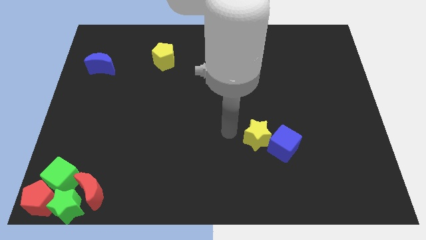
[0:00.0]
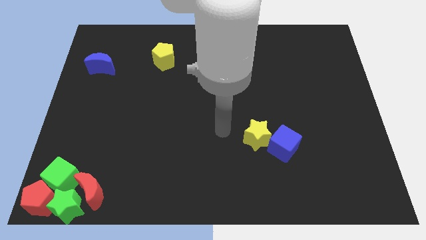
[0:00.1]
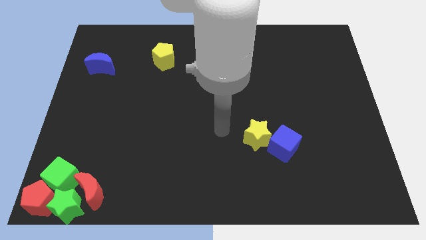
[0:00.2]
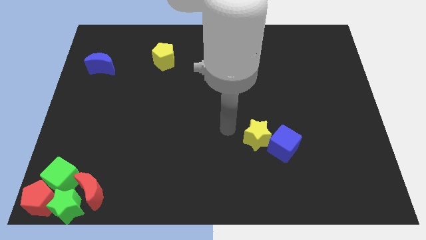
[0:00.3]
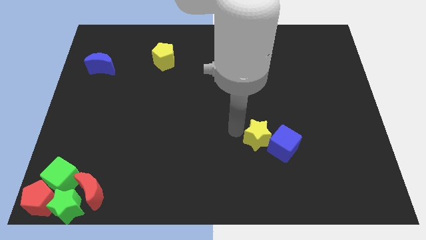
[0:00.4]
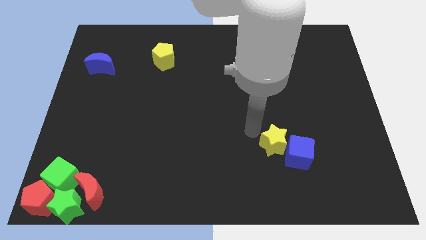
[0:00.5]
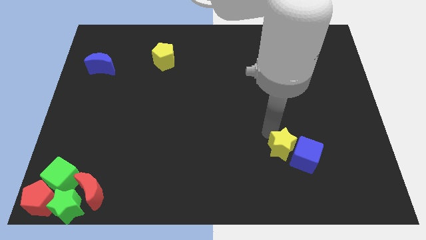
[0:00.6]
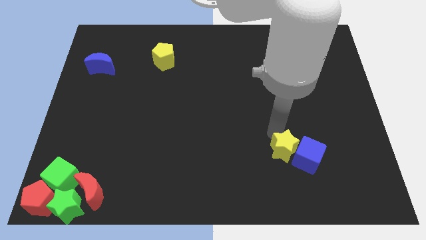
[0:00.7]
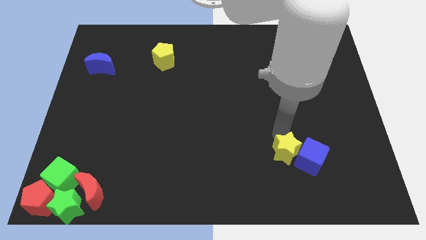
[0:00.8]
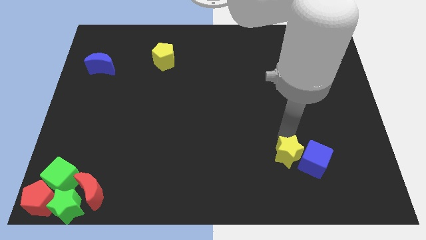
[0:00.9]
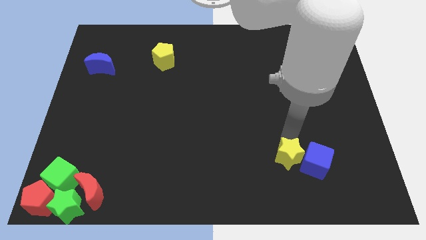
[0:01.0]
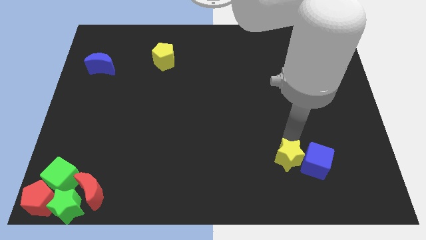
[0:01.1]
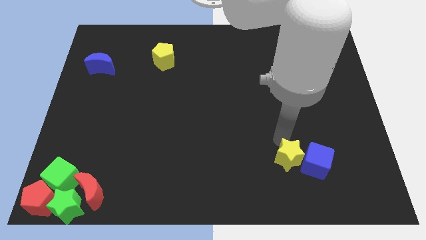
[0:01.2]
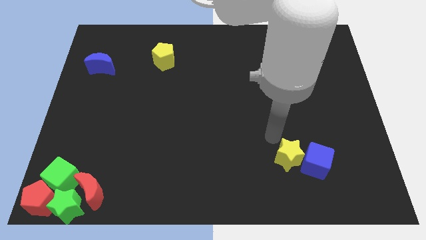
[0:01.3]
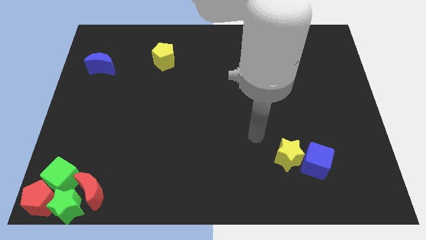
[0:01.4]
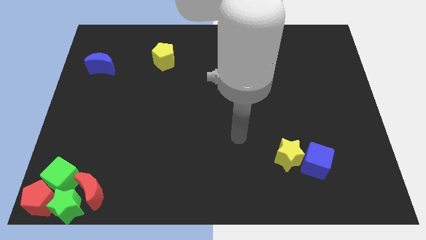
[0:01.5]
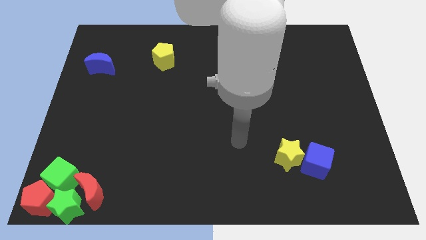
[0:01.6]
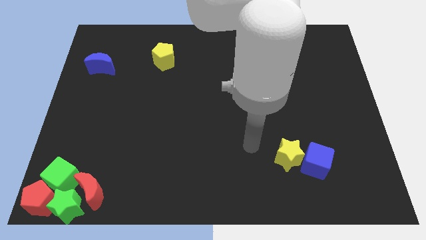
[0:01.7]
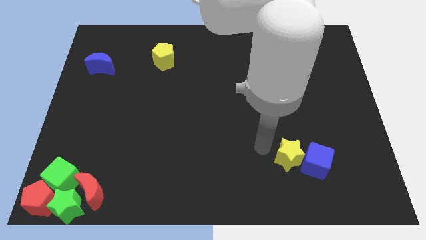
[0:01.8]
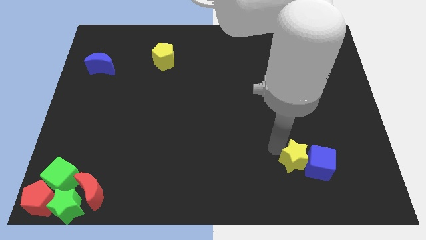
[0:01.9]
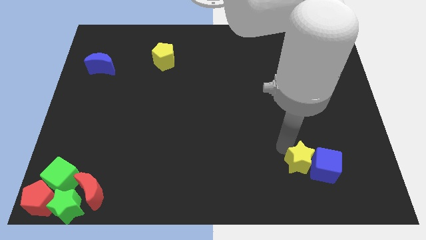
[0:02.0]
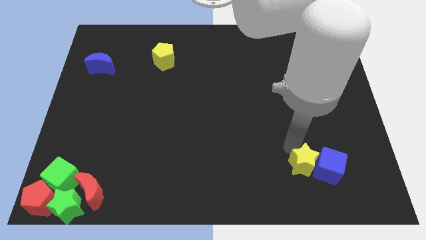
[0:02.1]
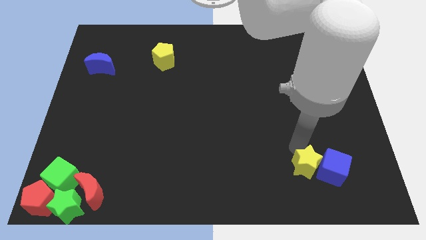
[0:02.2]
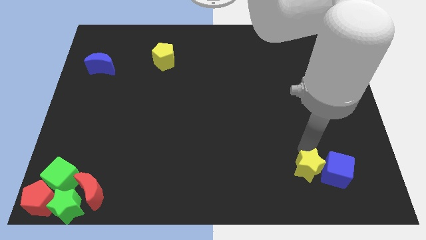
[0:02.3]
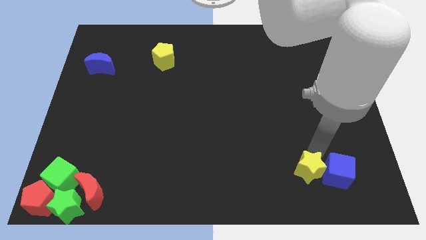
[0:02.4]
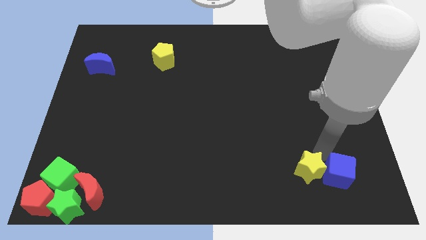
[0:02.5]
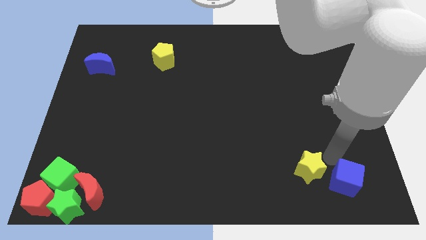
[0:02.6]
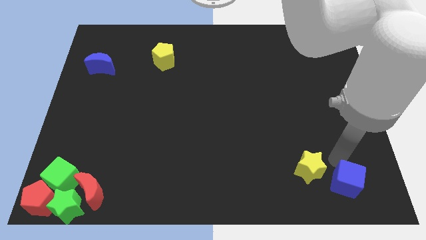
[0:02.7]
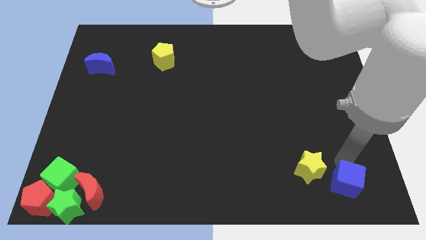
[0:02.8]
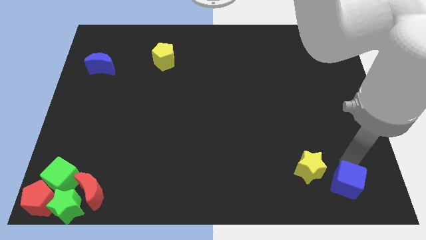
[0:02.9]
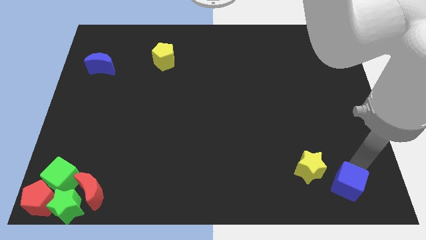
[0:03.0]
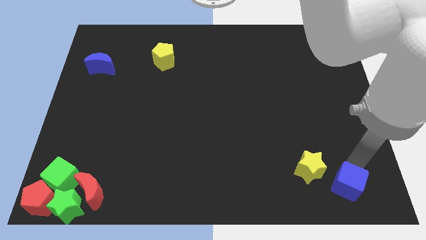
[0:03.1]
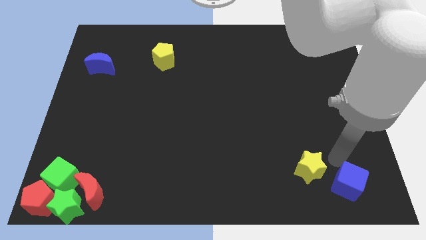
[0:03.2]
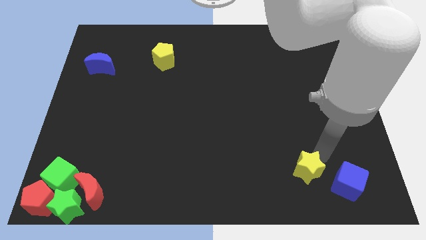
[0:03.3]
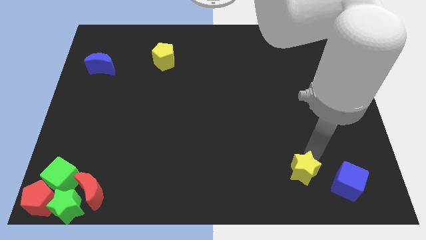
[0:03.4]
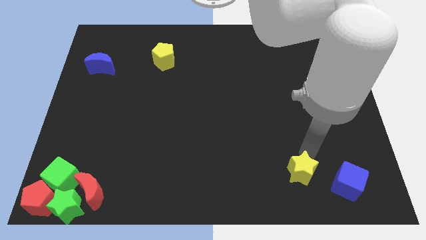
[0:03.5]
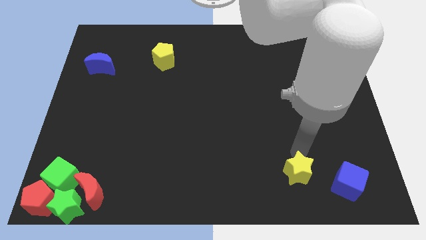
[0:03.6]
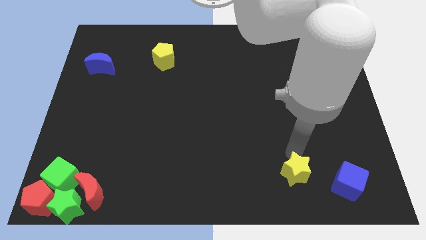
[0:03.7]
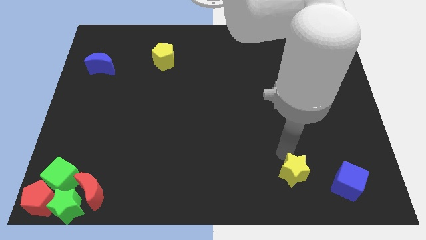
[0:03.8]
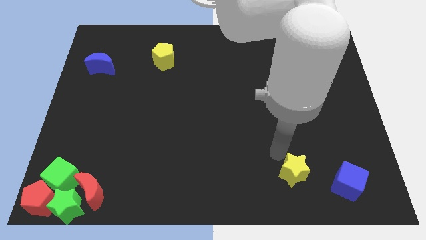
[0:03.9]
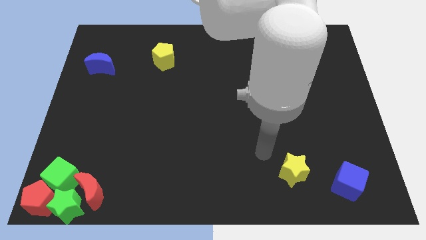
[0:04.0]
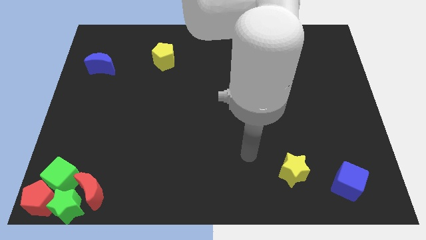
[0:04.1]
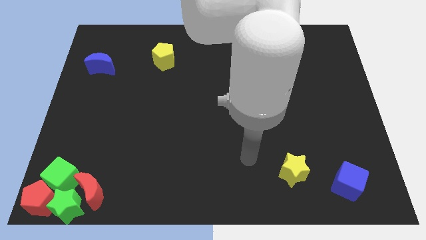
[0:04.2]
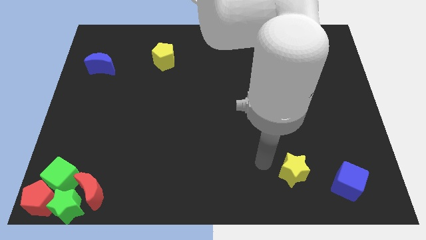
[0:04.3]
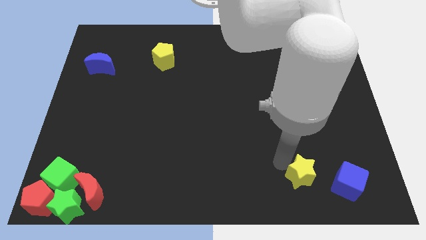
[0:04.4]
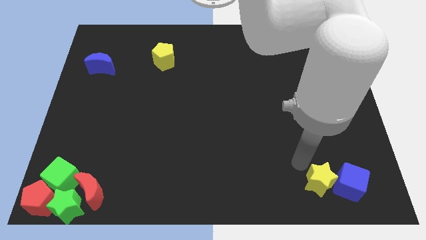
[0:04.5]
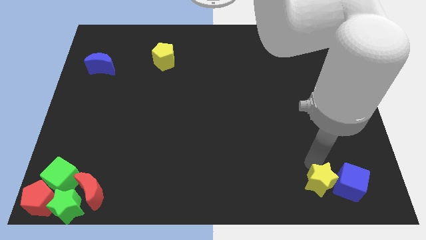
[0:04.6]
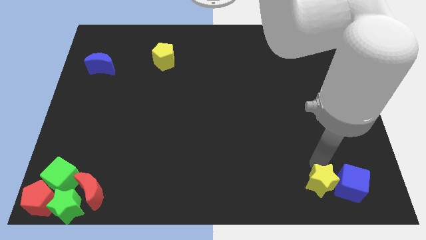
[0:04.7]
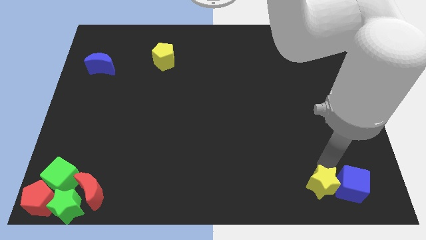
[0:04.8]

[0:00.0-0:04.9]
push the yellow star and blue cube towards the bottom right corner of the board

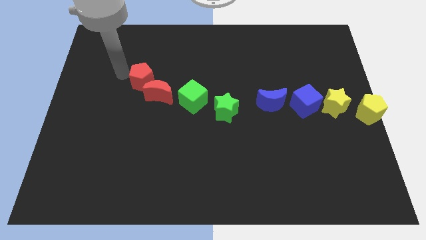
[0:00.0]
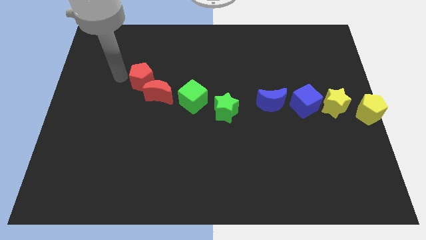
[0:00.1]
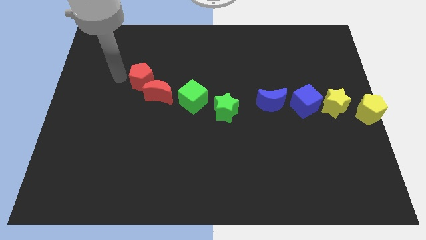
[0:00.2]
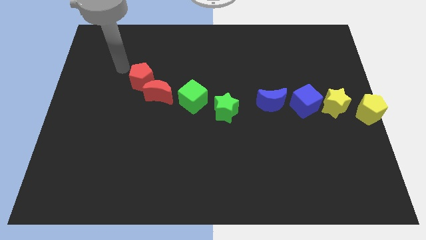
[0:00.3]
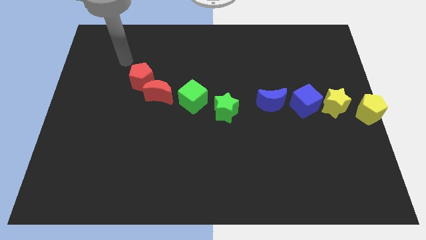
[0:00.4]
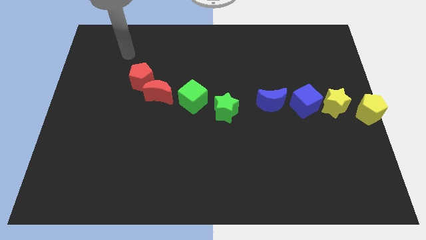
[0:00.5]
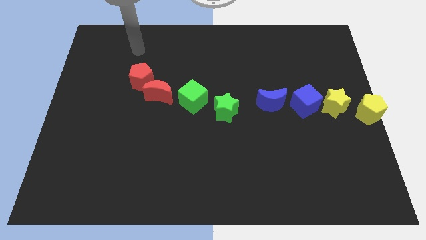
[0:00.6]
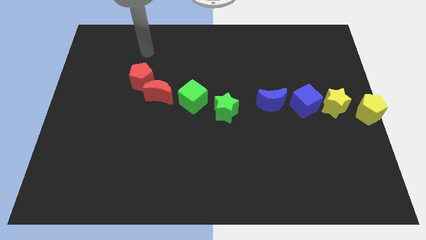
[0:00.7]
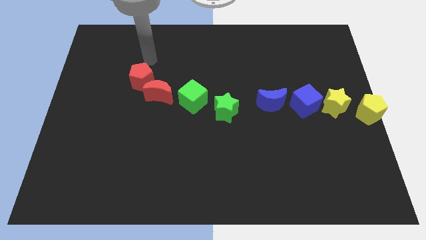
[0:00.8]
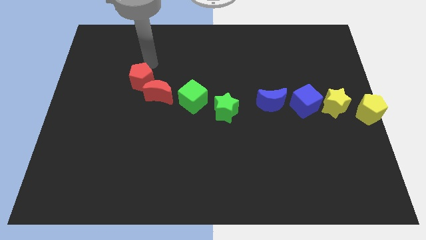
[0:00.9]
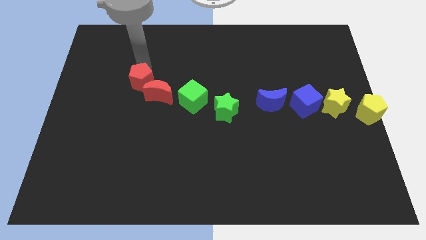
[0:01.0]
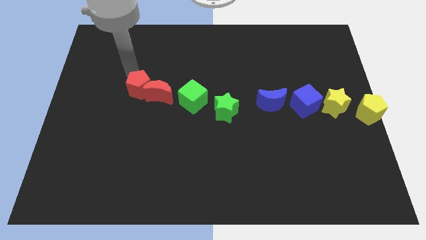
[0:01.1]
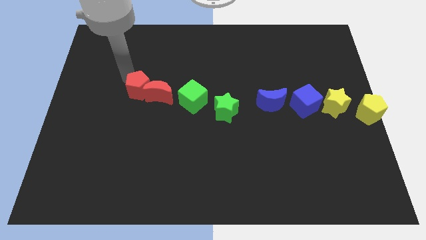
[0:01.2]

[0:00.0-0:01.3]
push the red pentagon into the red moon

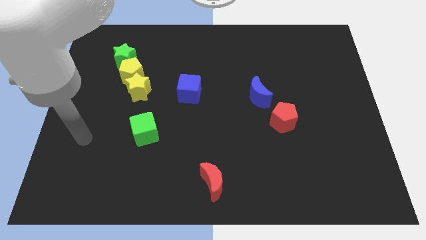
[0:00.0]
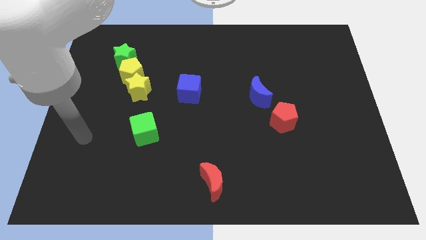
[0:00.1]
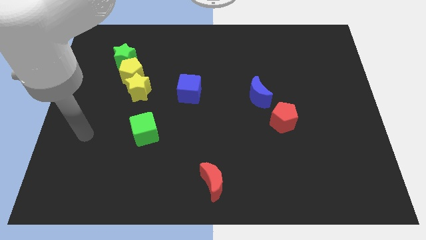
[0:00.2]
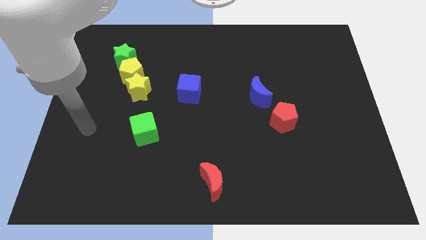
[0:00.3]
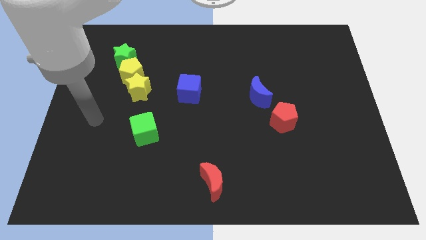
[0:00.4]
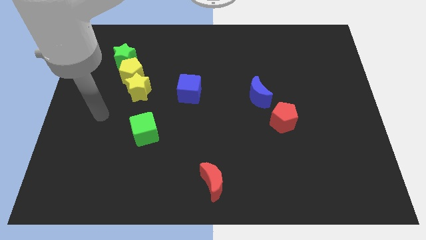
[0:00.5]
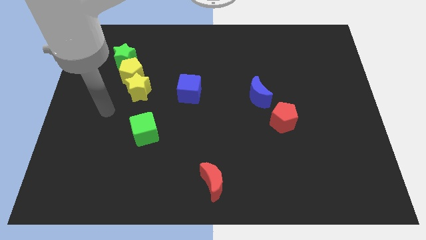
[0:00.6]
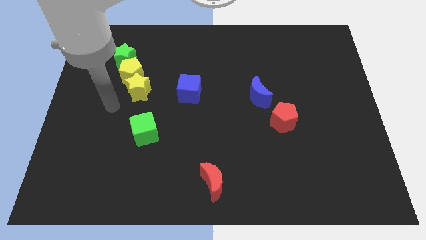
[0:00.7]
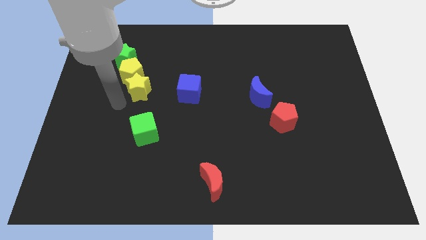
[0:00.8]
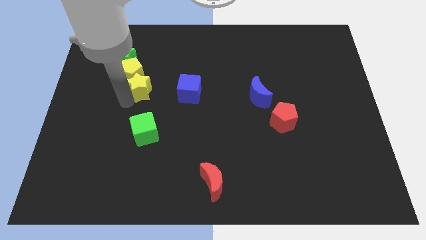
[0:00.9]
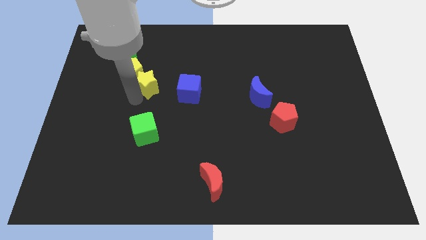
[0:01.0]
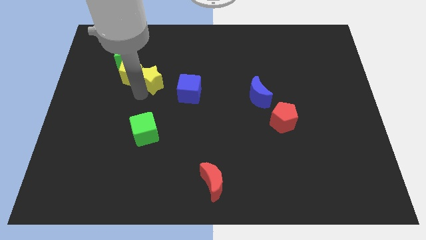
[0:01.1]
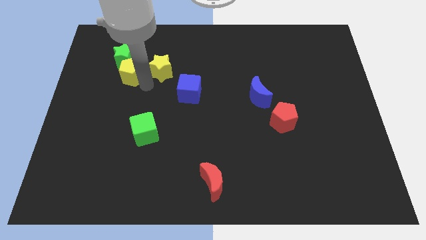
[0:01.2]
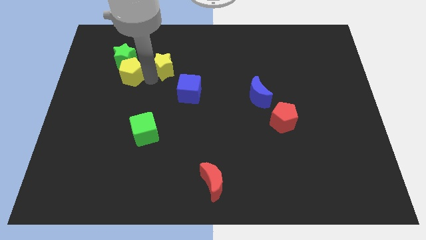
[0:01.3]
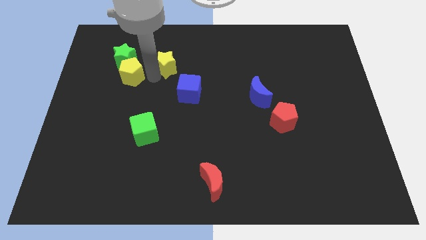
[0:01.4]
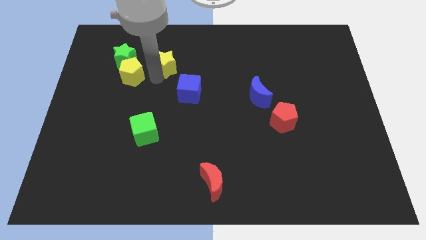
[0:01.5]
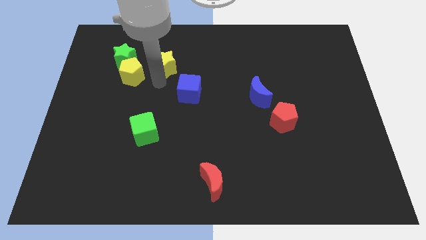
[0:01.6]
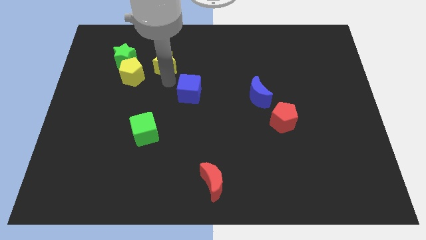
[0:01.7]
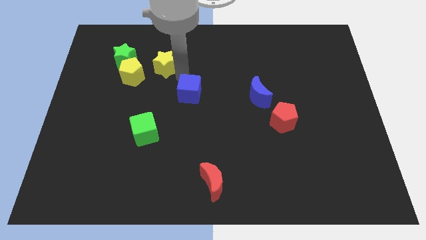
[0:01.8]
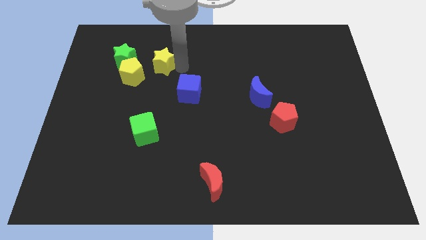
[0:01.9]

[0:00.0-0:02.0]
push the yellow star away from the yellow pentagon

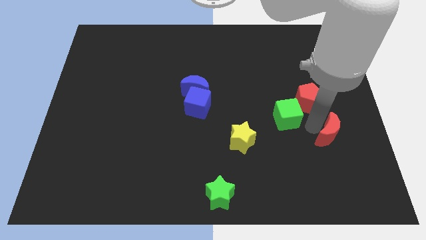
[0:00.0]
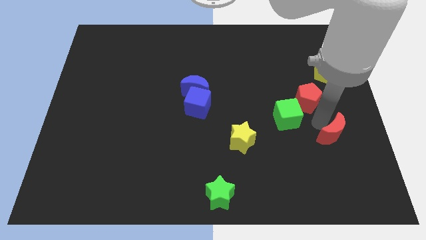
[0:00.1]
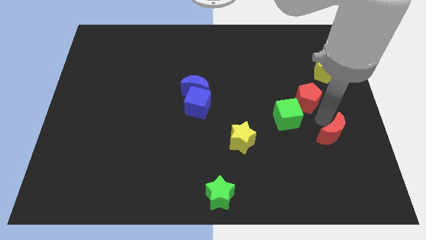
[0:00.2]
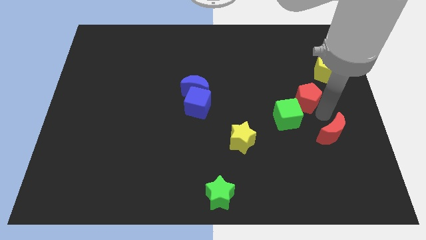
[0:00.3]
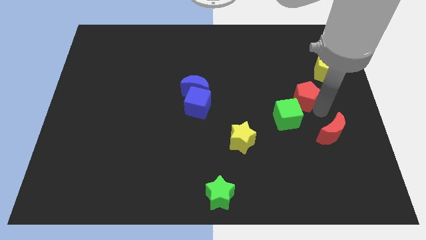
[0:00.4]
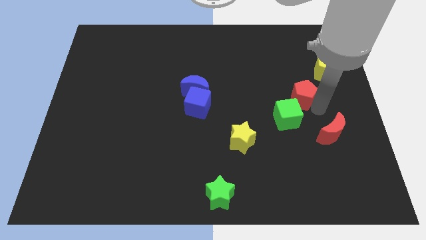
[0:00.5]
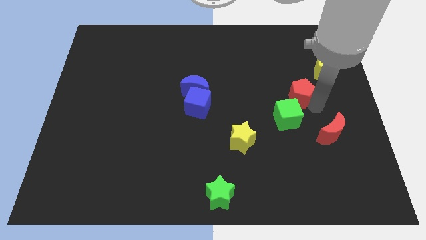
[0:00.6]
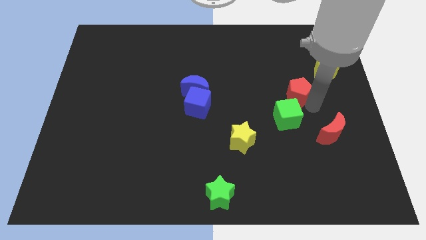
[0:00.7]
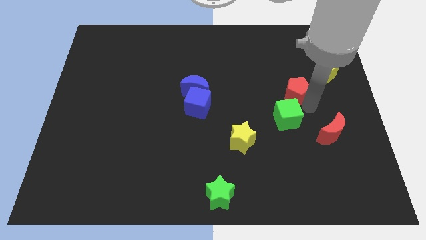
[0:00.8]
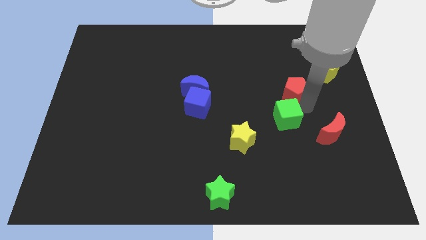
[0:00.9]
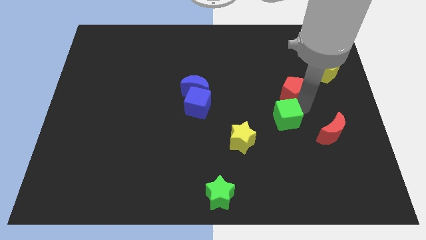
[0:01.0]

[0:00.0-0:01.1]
push the red pentagon slightly up
